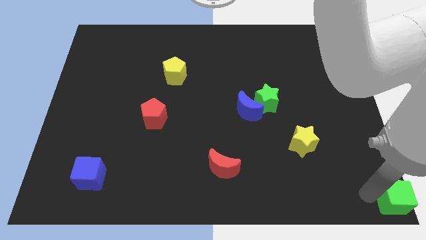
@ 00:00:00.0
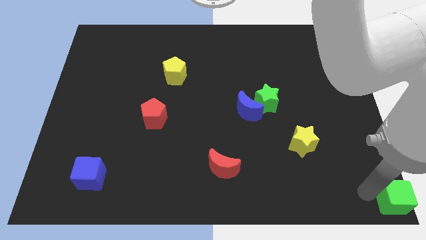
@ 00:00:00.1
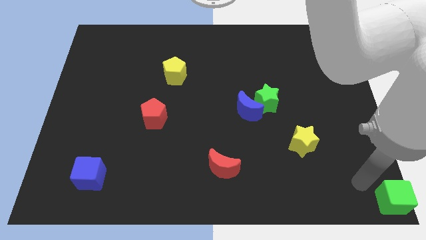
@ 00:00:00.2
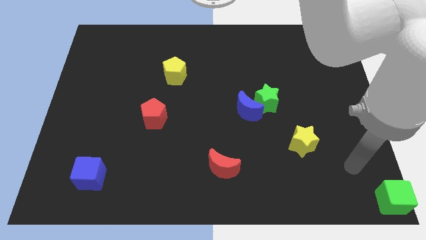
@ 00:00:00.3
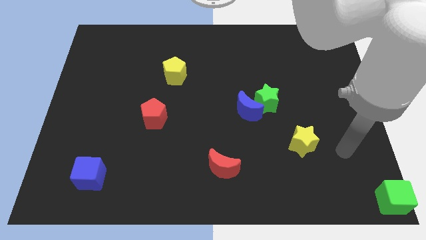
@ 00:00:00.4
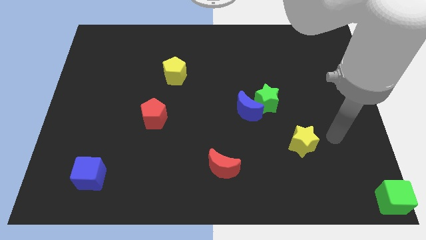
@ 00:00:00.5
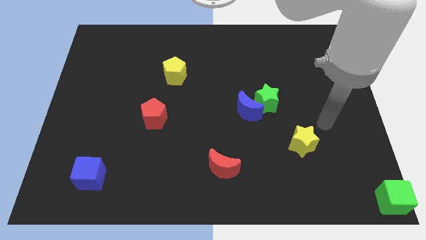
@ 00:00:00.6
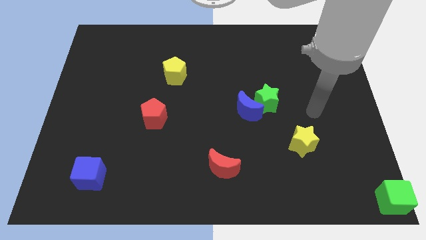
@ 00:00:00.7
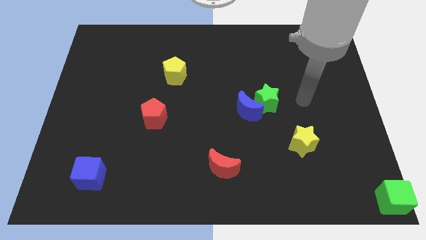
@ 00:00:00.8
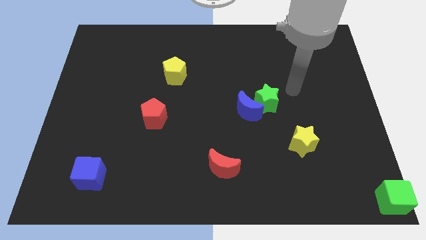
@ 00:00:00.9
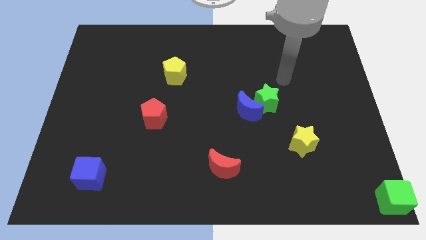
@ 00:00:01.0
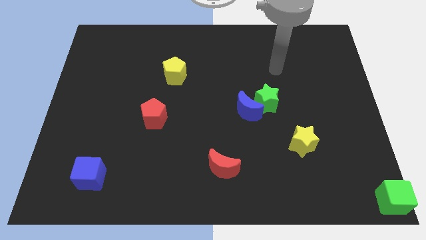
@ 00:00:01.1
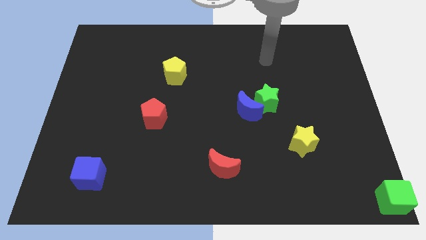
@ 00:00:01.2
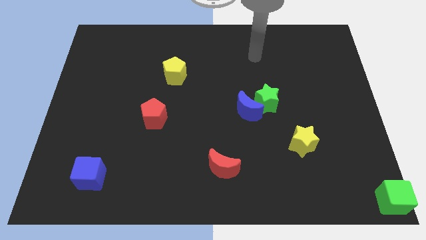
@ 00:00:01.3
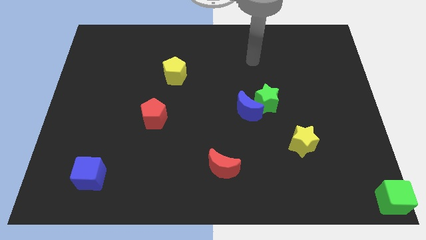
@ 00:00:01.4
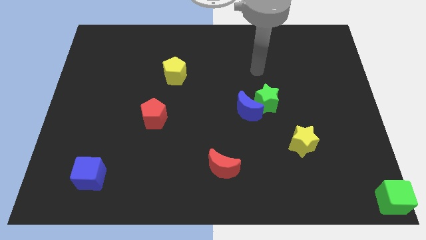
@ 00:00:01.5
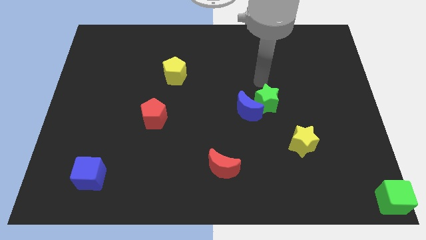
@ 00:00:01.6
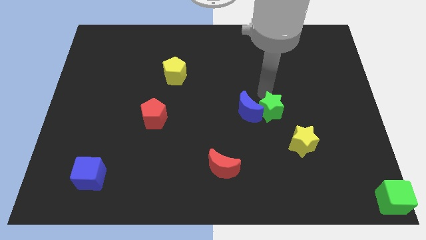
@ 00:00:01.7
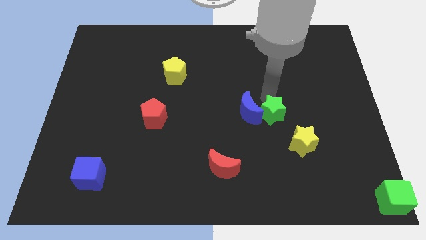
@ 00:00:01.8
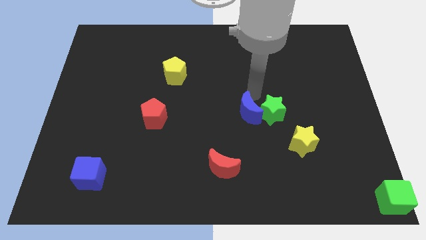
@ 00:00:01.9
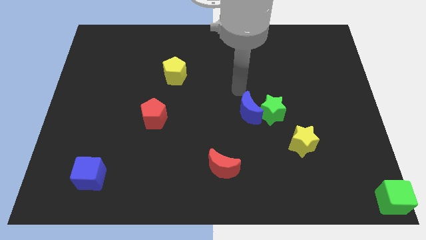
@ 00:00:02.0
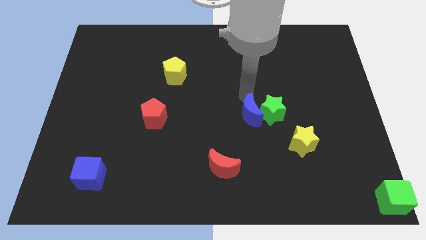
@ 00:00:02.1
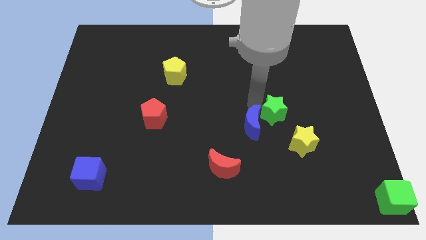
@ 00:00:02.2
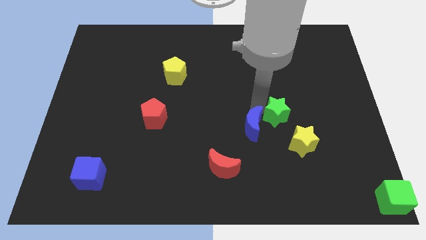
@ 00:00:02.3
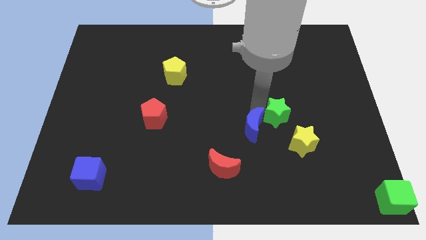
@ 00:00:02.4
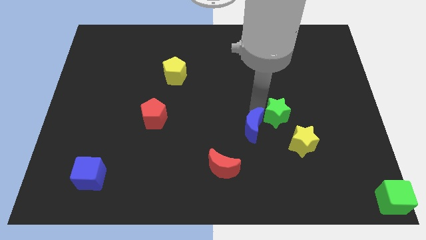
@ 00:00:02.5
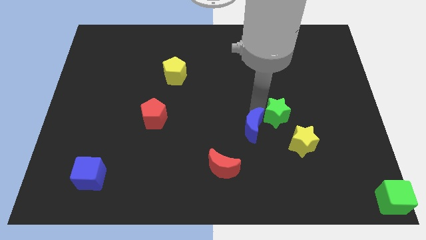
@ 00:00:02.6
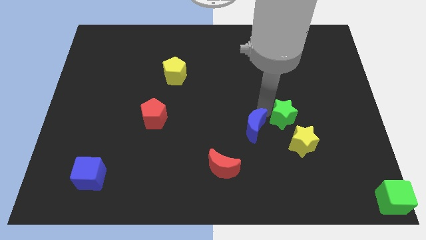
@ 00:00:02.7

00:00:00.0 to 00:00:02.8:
slightly push blue moon downwards

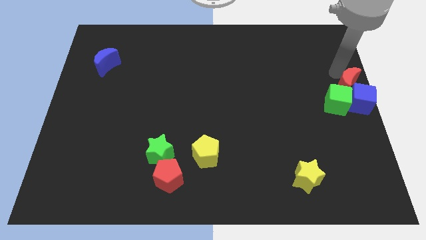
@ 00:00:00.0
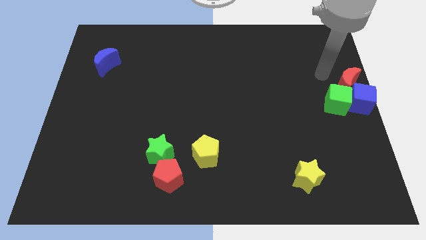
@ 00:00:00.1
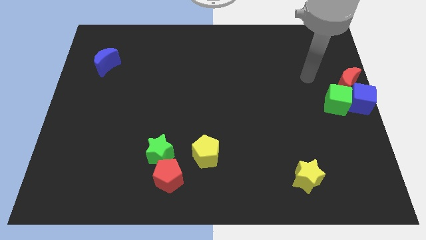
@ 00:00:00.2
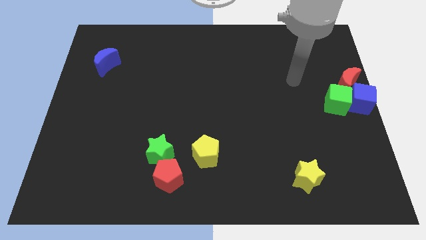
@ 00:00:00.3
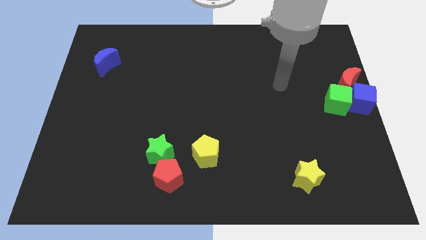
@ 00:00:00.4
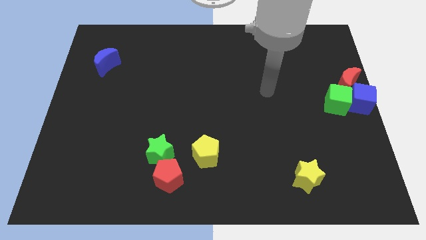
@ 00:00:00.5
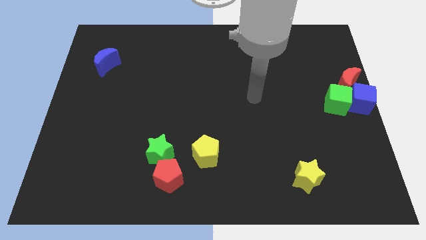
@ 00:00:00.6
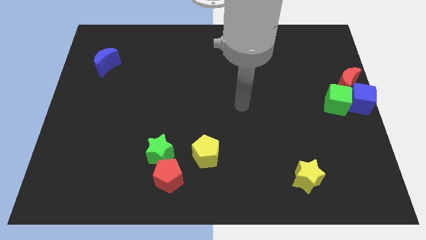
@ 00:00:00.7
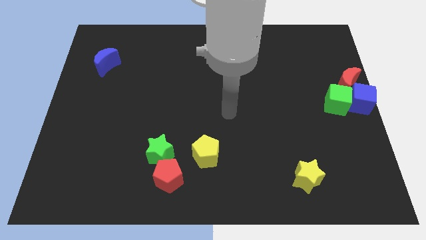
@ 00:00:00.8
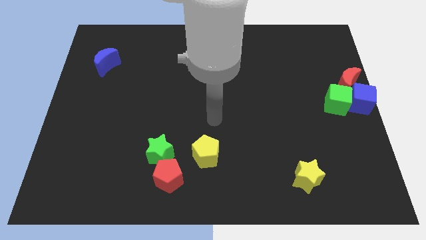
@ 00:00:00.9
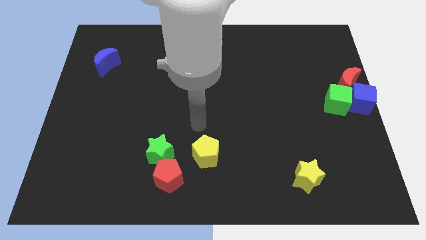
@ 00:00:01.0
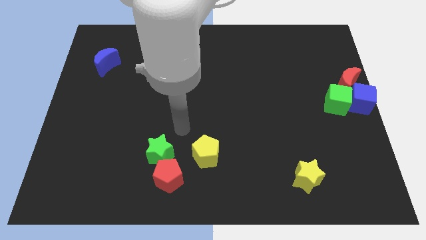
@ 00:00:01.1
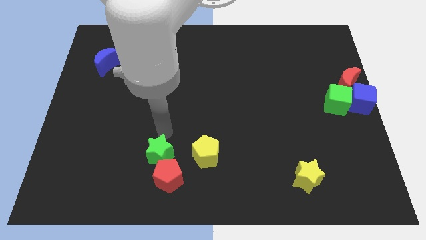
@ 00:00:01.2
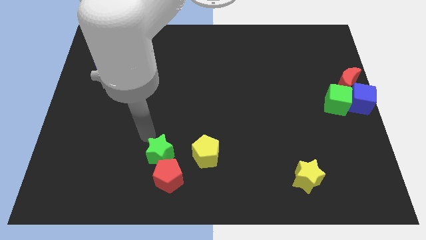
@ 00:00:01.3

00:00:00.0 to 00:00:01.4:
move your arm away from red moon

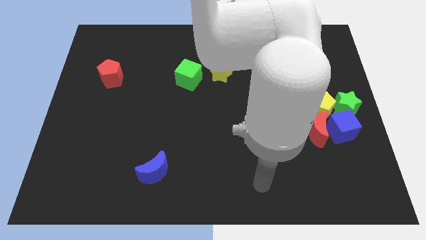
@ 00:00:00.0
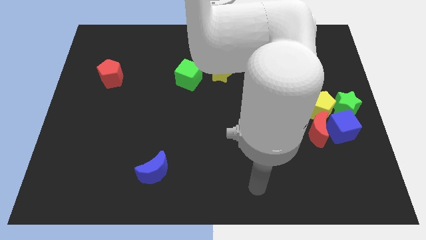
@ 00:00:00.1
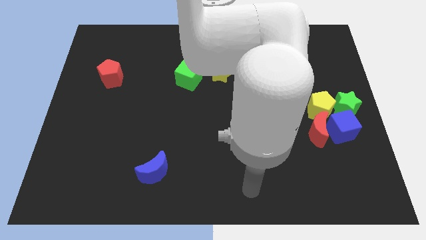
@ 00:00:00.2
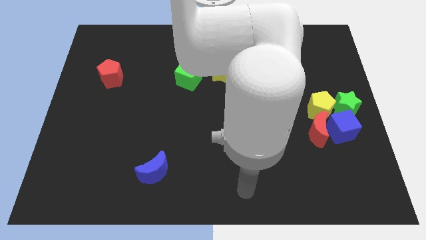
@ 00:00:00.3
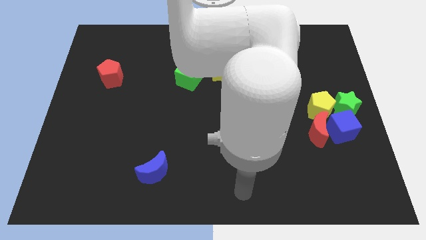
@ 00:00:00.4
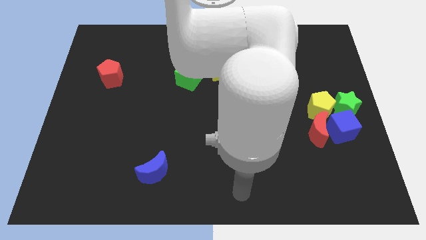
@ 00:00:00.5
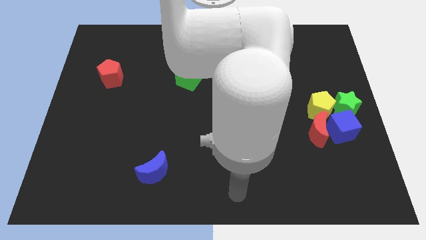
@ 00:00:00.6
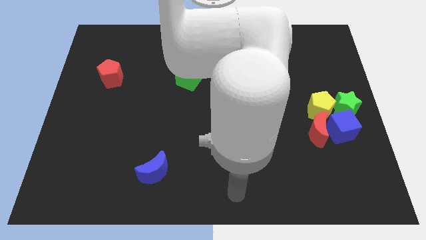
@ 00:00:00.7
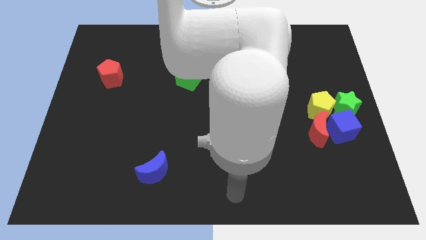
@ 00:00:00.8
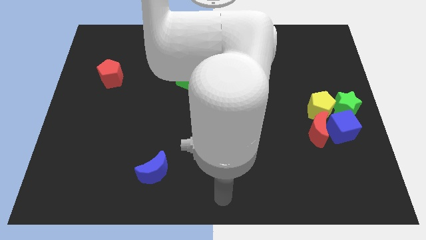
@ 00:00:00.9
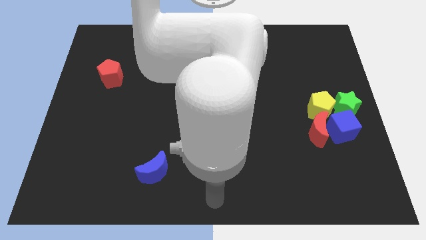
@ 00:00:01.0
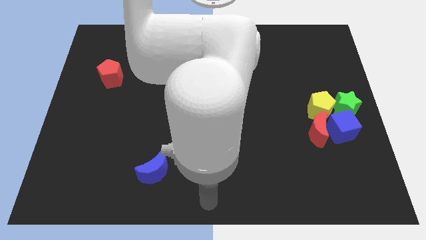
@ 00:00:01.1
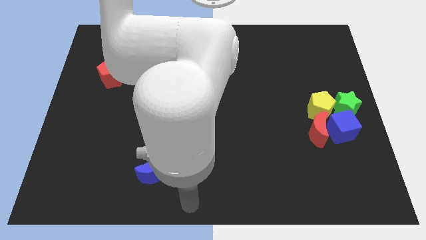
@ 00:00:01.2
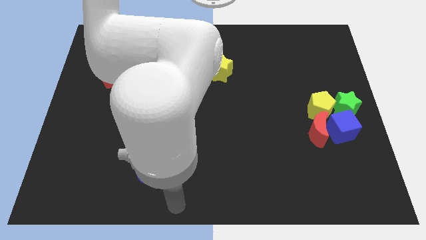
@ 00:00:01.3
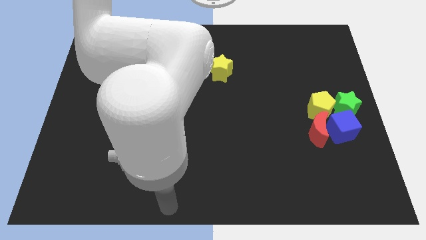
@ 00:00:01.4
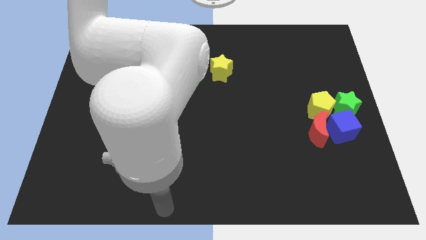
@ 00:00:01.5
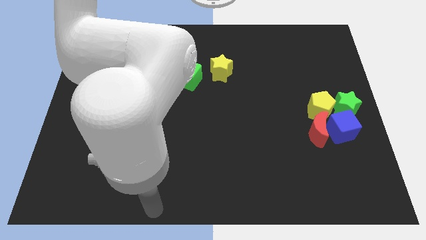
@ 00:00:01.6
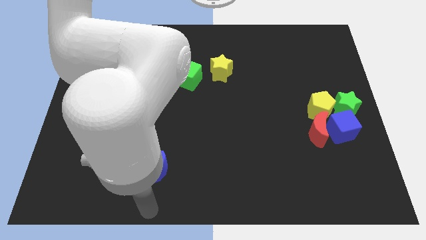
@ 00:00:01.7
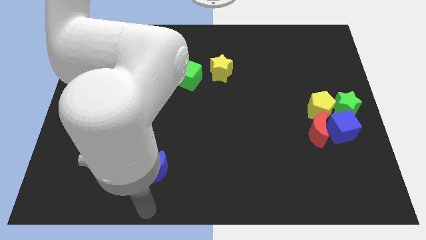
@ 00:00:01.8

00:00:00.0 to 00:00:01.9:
point your arm below the blue moon

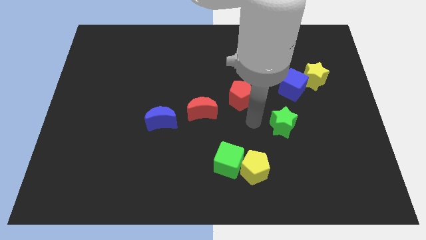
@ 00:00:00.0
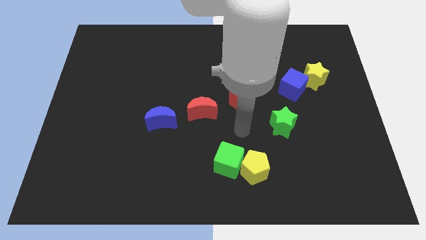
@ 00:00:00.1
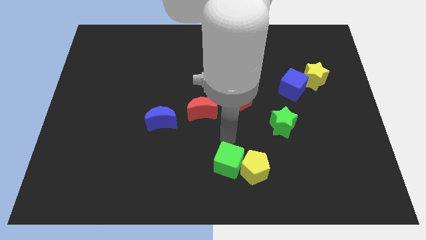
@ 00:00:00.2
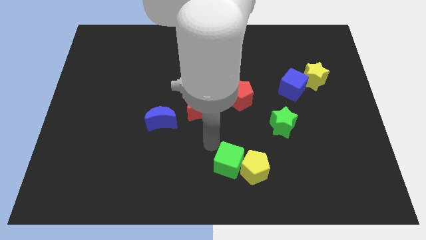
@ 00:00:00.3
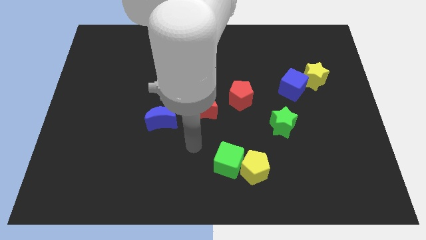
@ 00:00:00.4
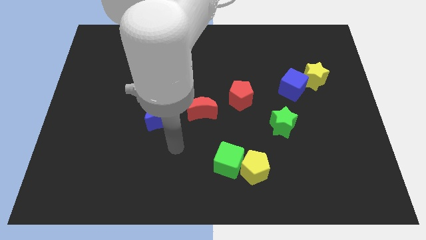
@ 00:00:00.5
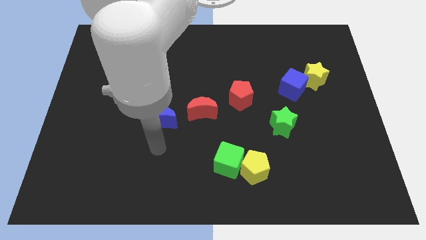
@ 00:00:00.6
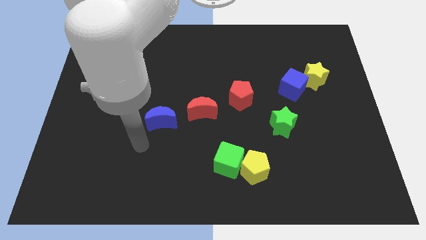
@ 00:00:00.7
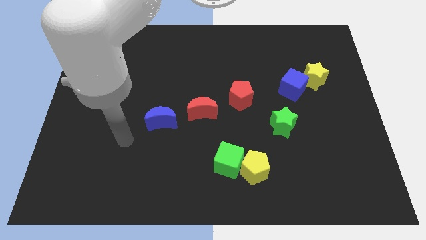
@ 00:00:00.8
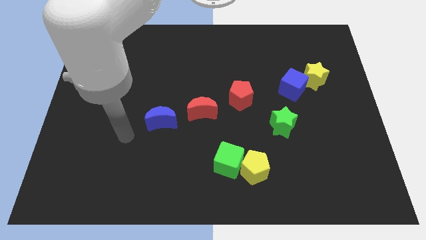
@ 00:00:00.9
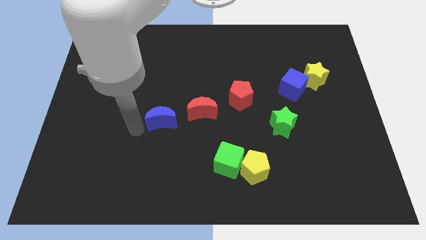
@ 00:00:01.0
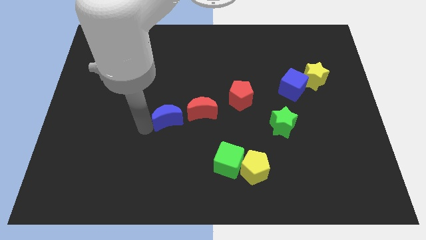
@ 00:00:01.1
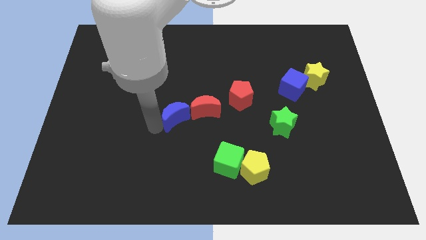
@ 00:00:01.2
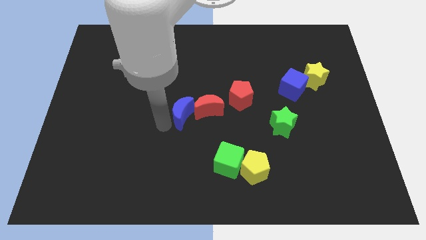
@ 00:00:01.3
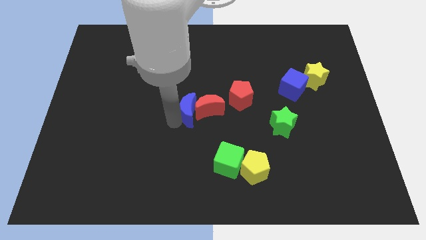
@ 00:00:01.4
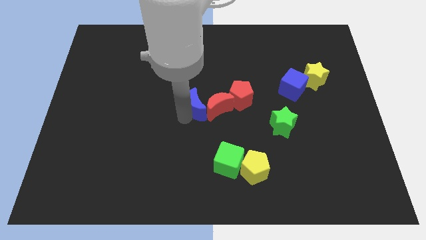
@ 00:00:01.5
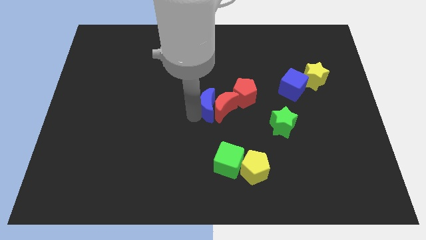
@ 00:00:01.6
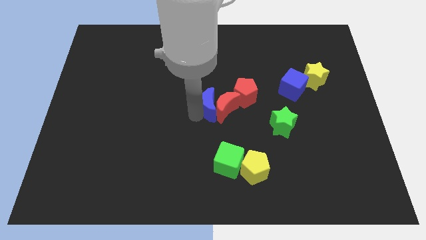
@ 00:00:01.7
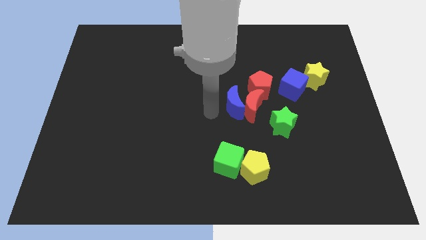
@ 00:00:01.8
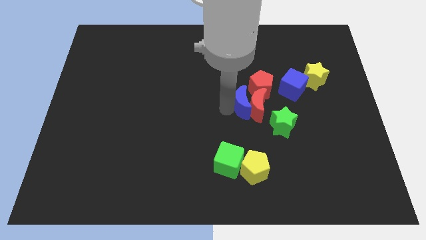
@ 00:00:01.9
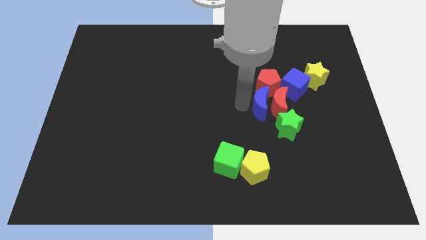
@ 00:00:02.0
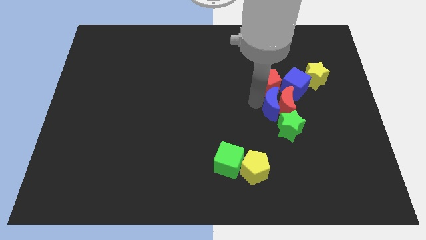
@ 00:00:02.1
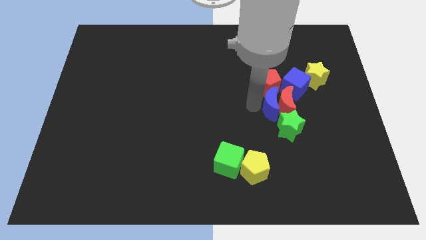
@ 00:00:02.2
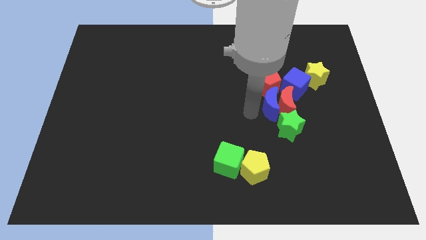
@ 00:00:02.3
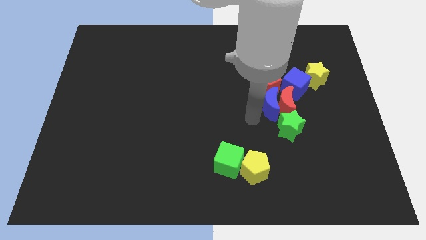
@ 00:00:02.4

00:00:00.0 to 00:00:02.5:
move the blue moon into the red moon
